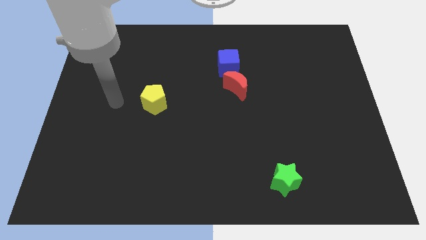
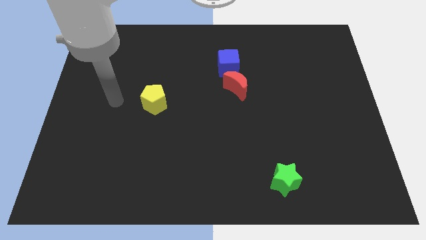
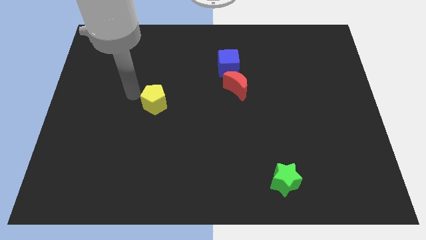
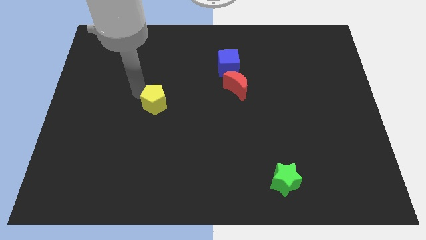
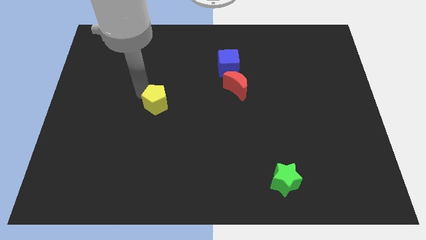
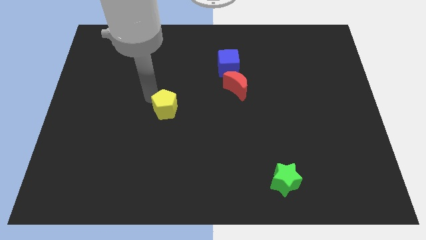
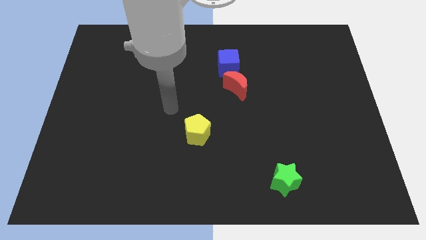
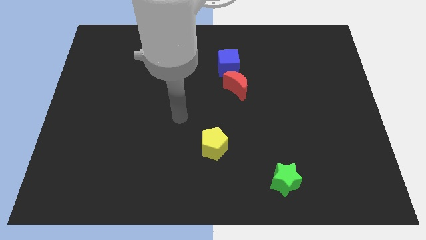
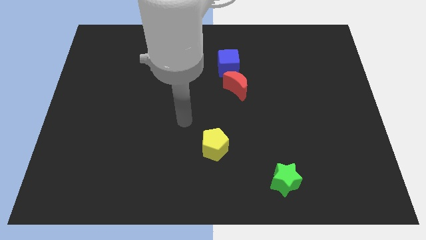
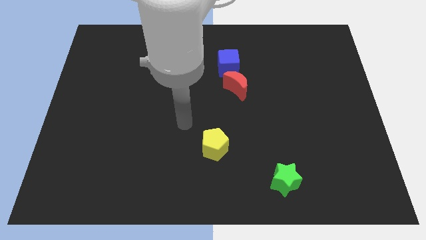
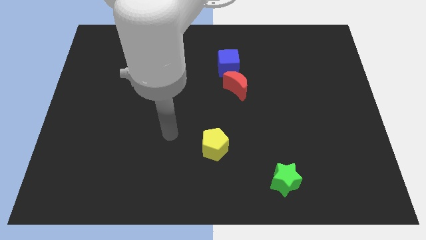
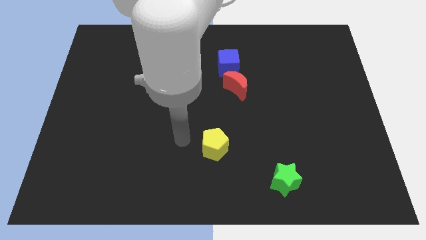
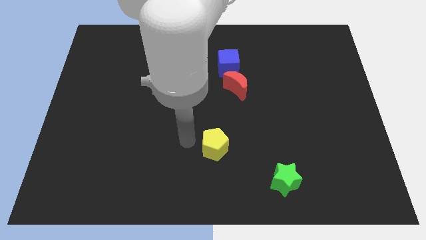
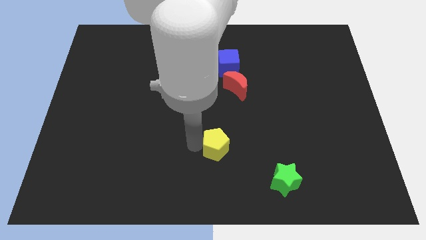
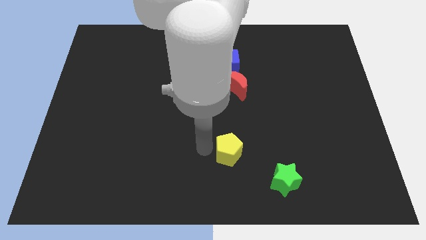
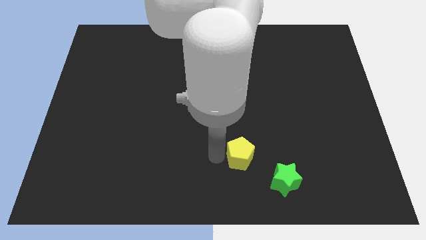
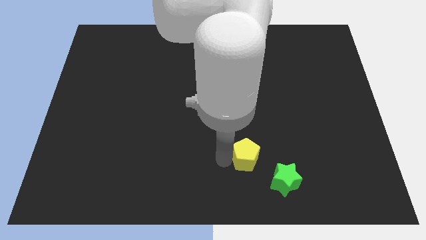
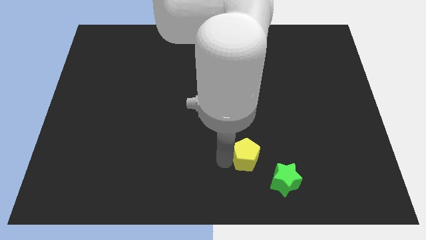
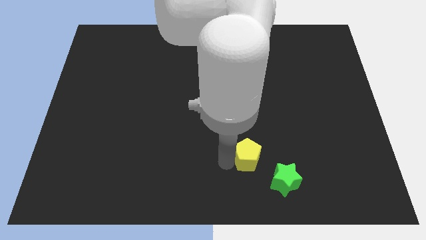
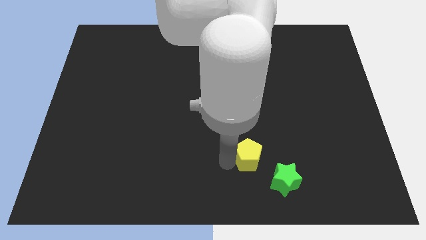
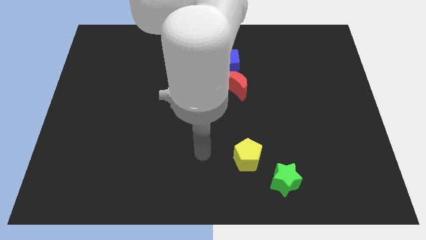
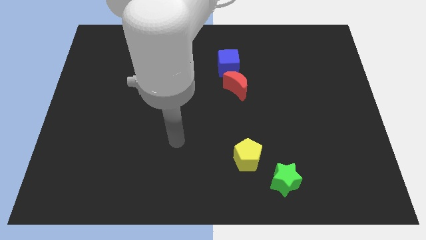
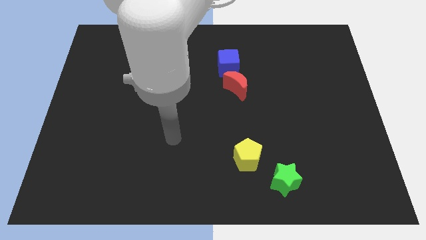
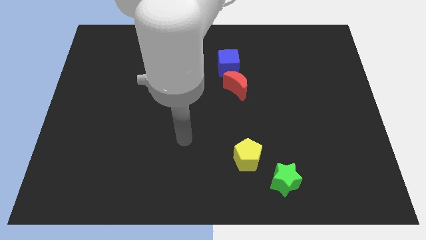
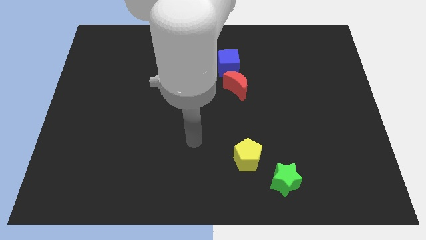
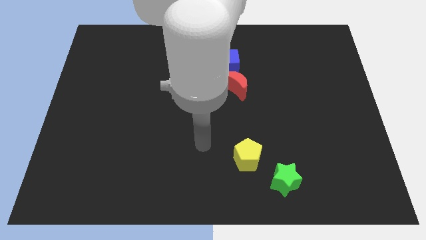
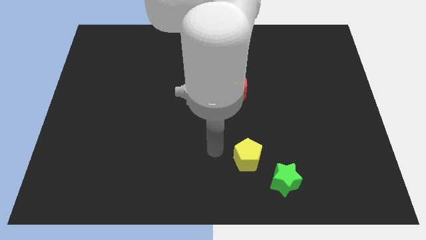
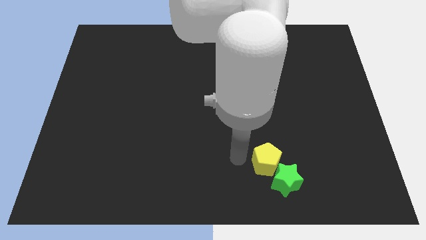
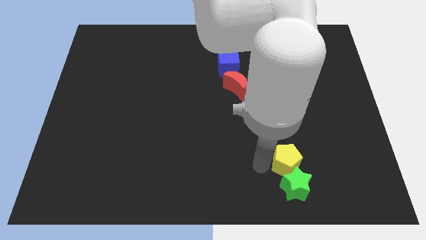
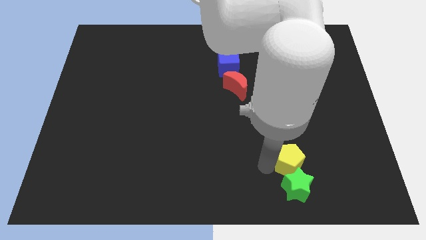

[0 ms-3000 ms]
push the yellow pentagon next to the star

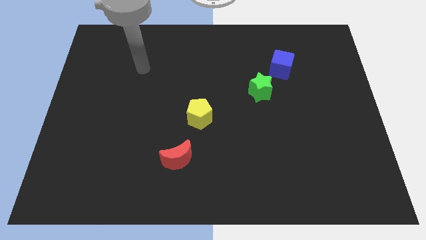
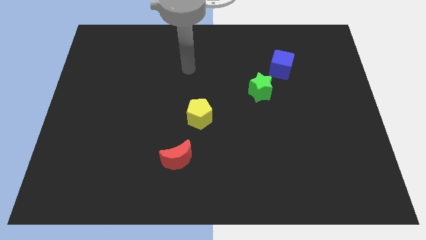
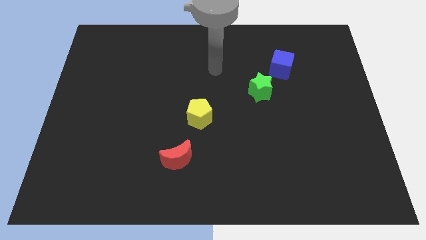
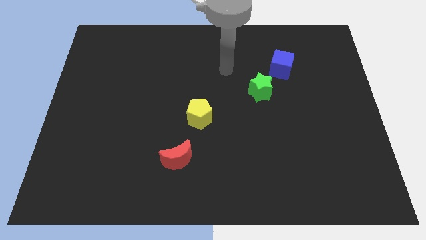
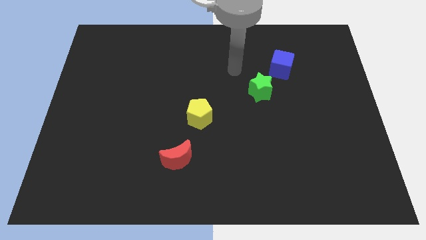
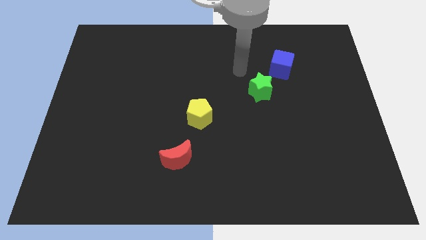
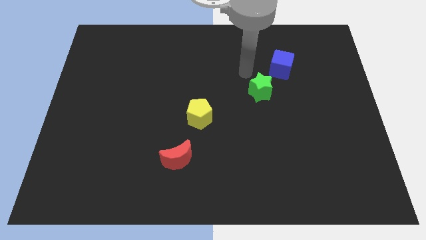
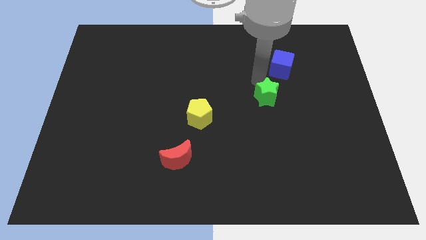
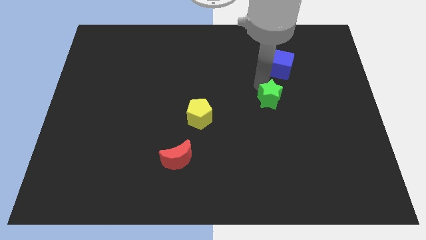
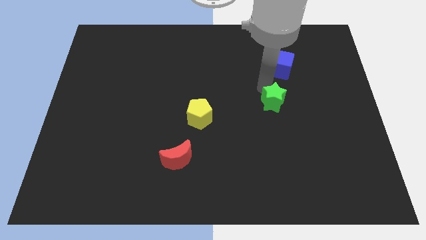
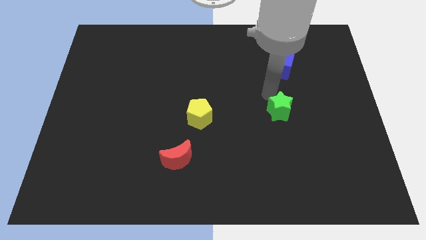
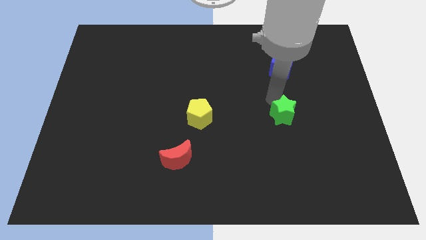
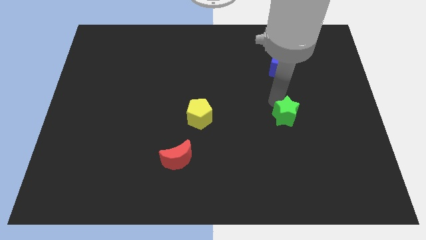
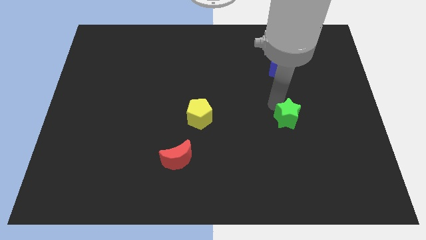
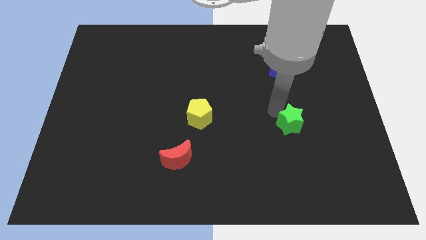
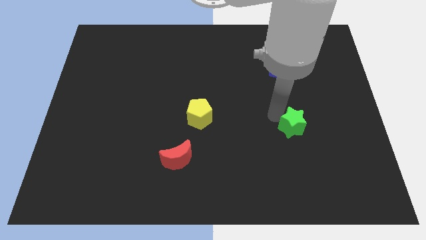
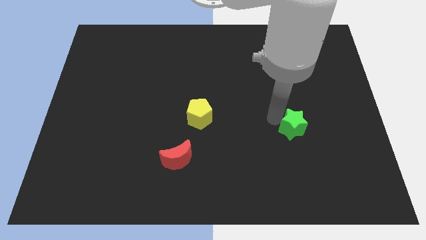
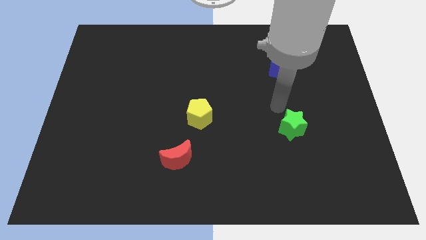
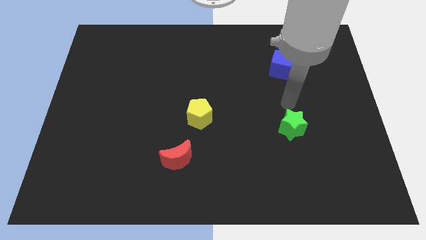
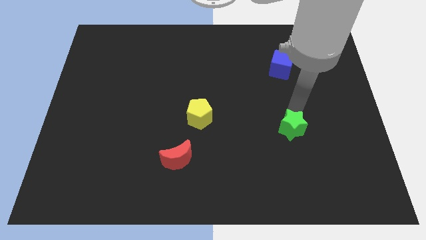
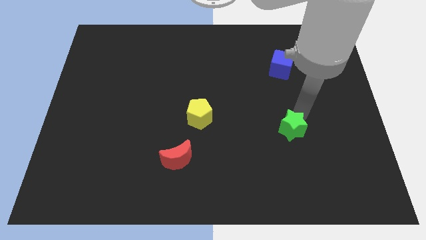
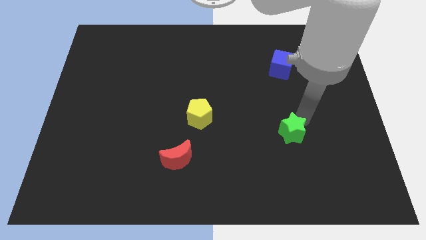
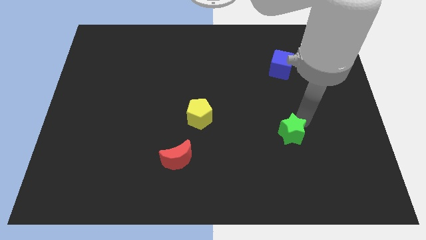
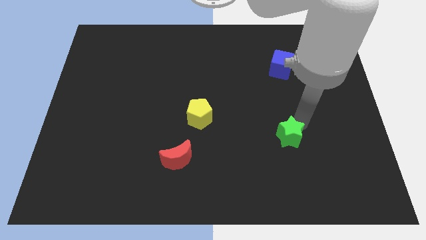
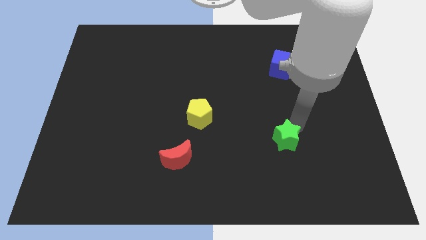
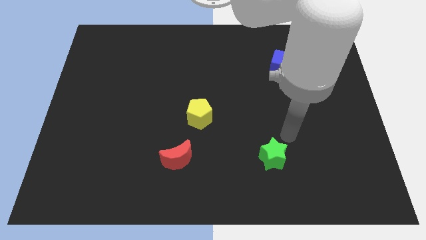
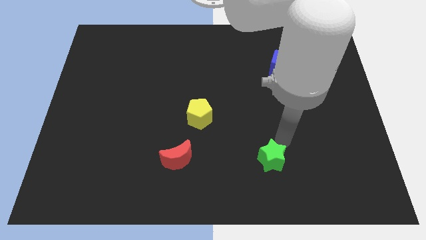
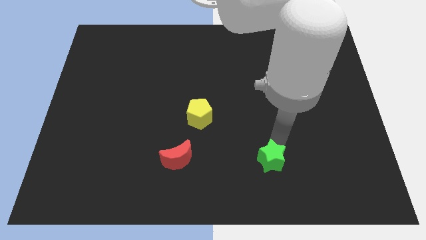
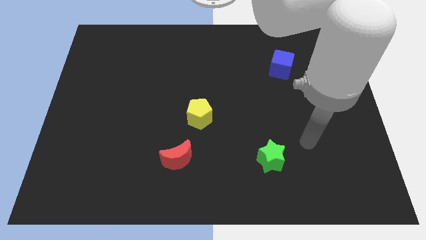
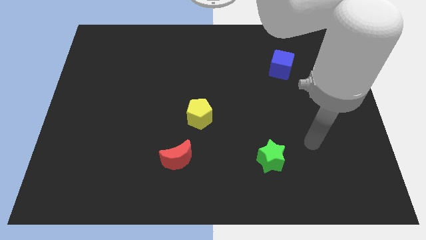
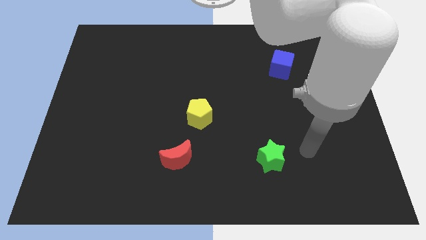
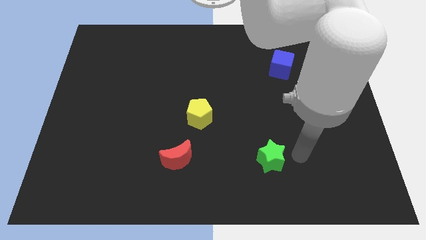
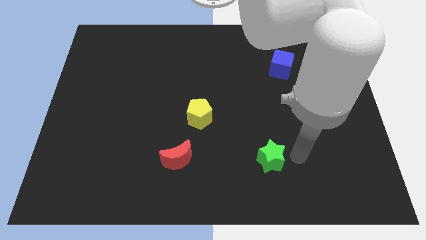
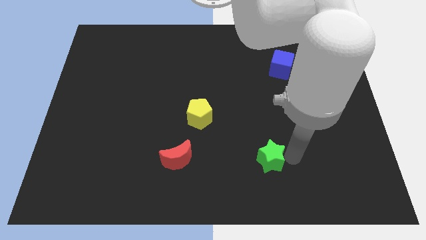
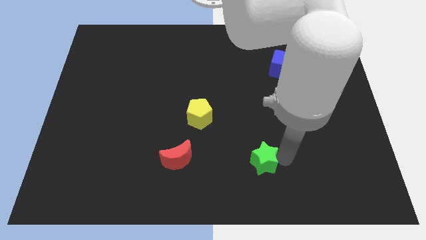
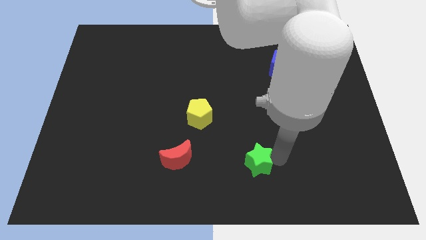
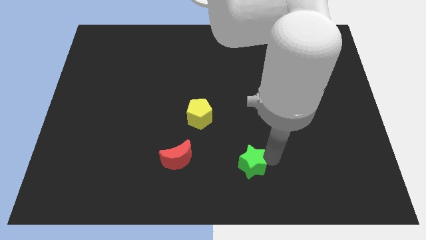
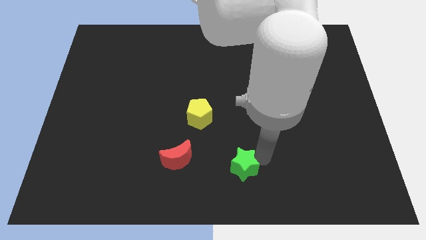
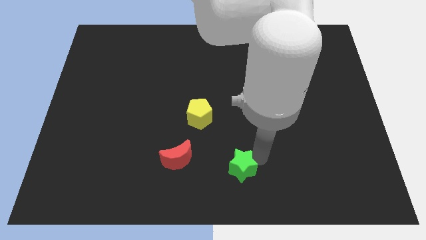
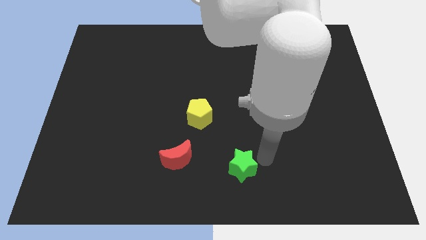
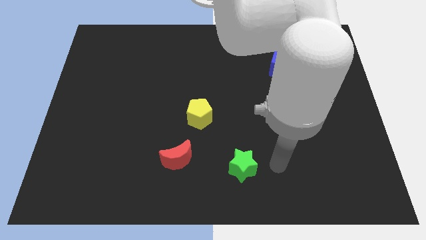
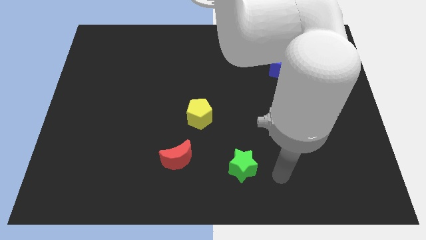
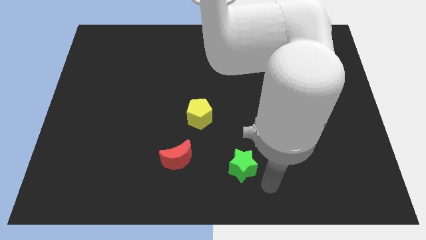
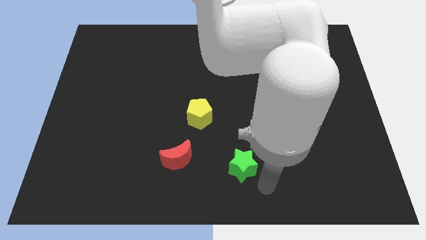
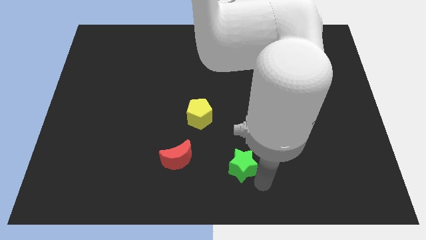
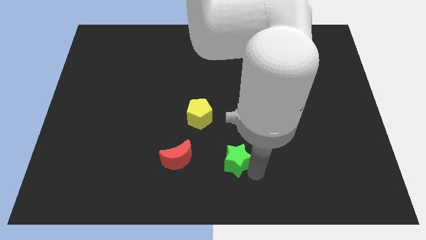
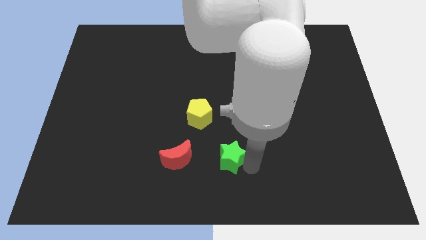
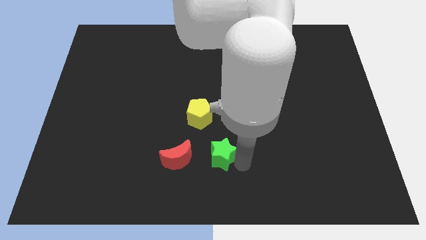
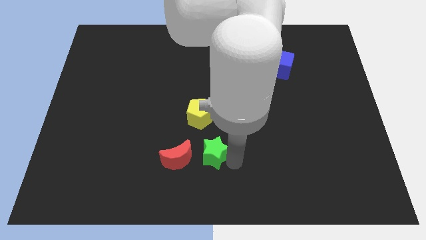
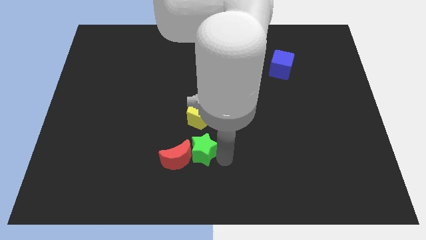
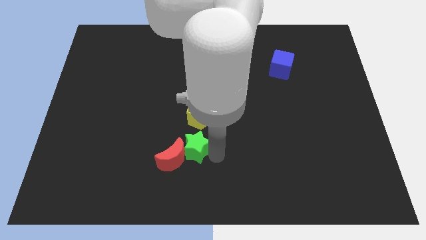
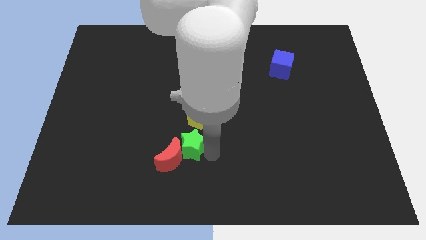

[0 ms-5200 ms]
slide the green block next to the red moon

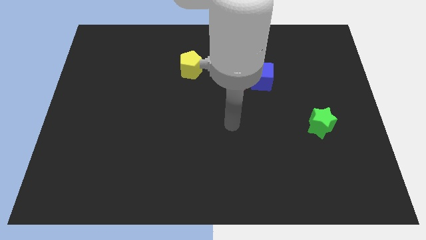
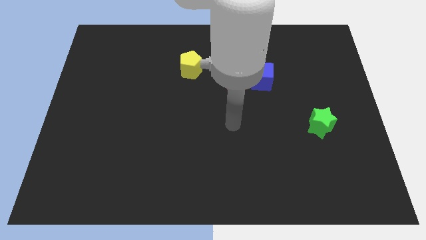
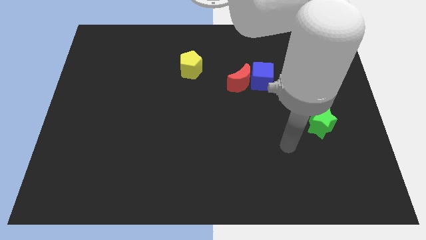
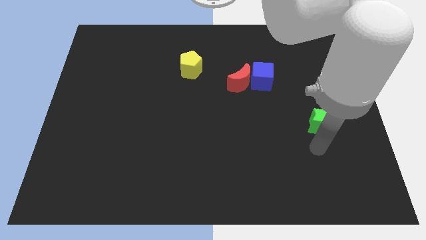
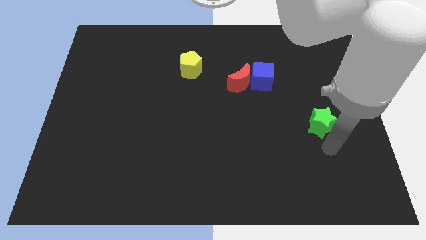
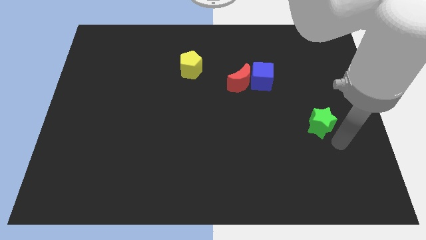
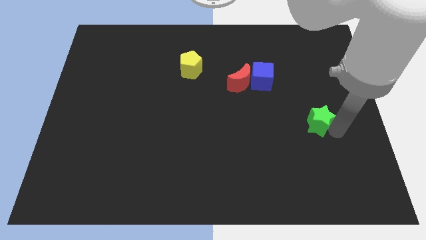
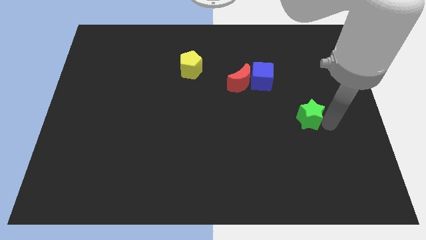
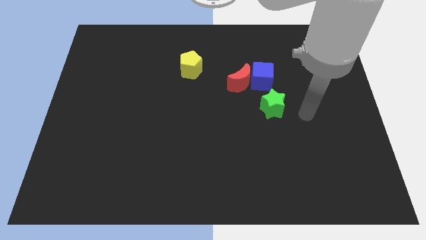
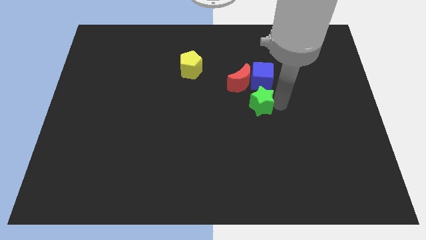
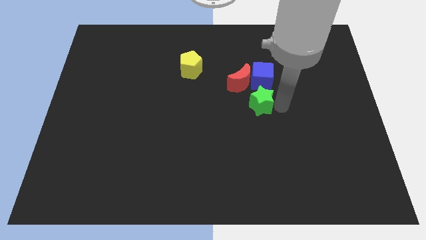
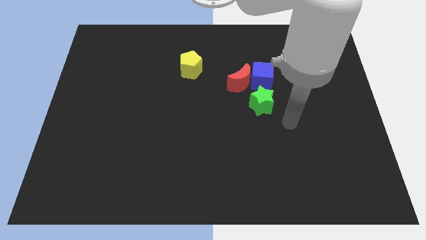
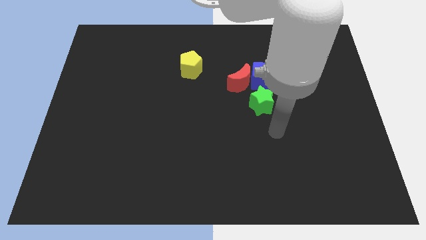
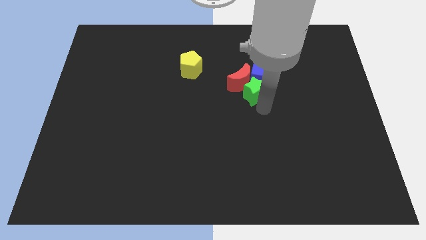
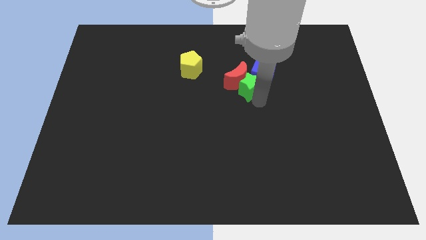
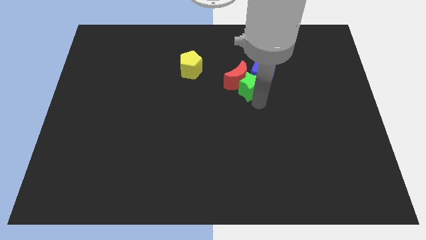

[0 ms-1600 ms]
slide the green star towards the blue block
